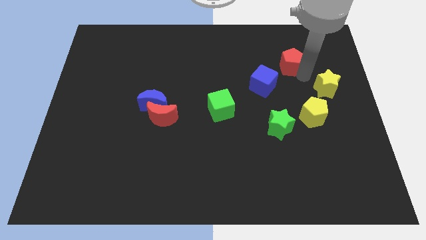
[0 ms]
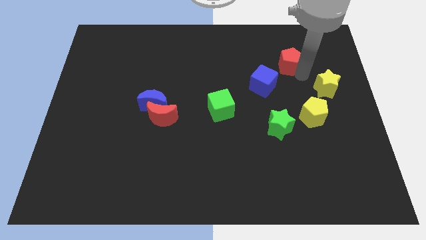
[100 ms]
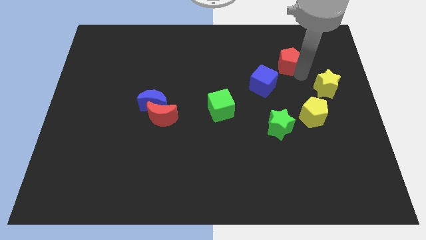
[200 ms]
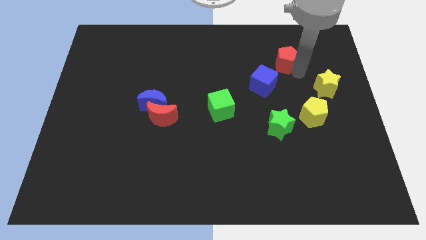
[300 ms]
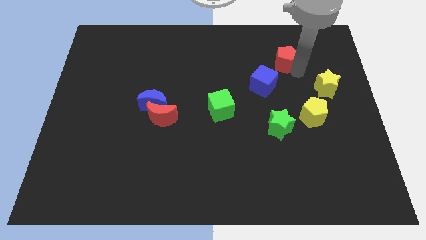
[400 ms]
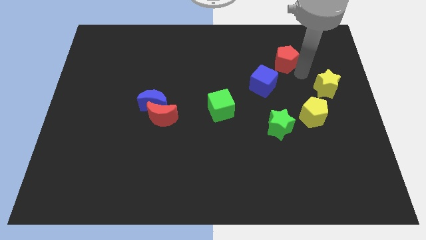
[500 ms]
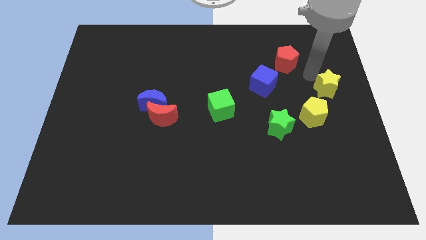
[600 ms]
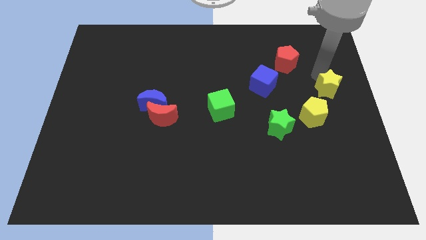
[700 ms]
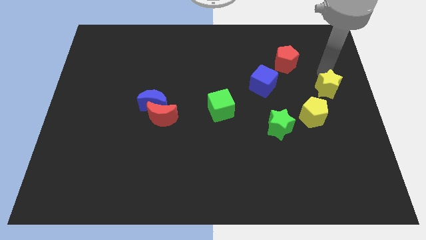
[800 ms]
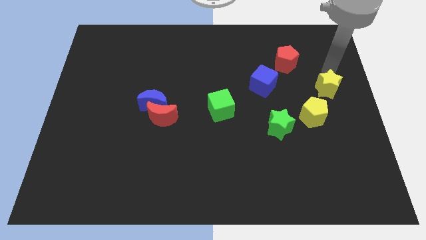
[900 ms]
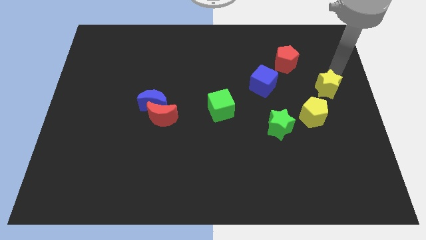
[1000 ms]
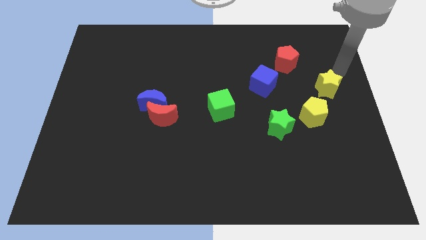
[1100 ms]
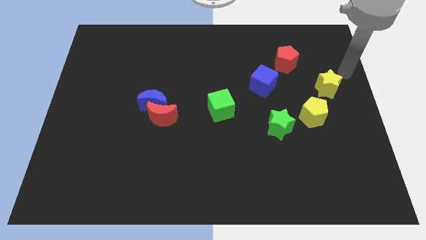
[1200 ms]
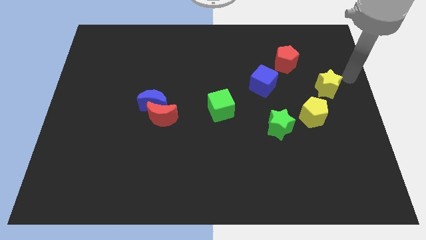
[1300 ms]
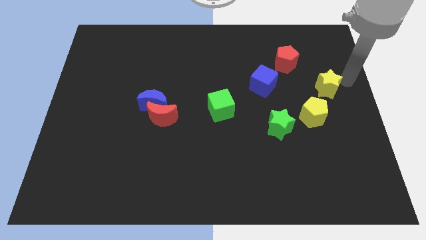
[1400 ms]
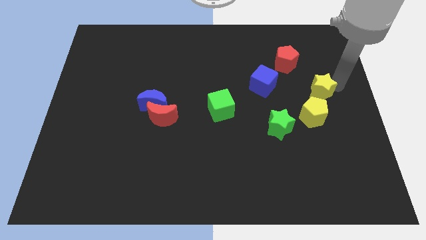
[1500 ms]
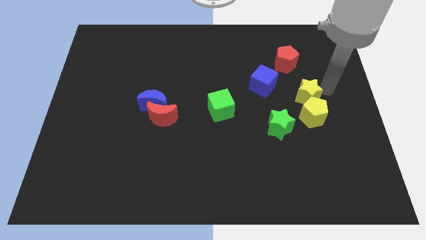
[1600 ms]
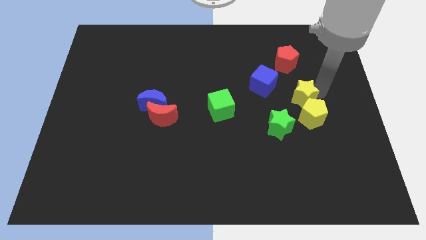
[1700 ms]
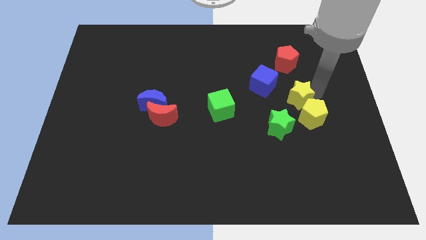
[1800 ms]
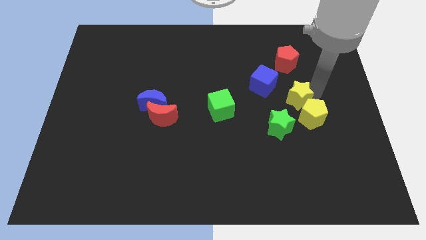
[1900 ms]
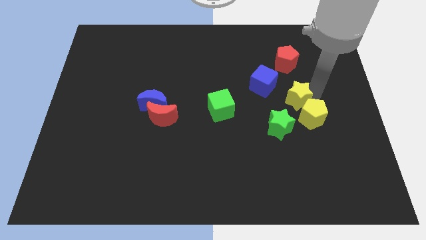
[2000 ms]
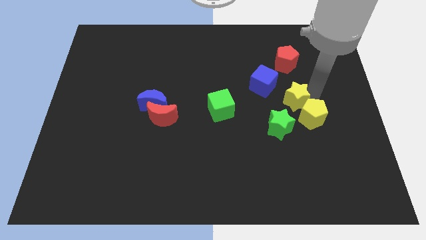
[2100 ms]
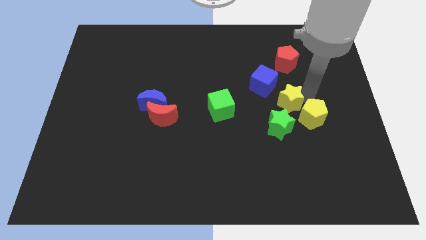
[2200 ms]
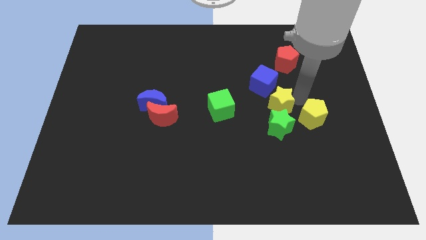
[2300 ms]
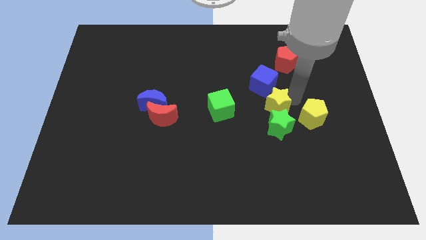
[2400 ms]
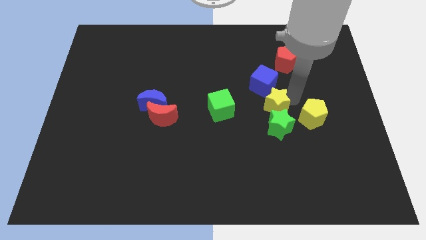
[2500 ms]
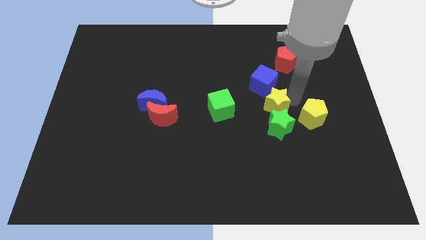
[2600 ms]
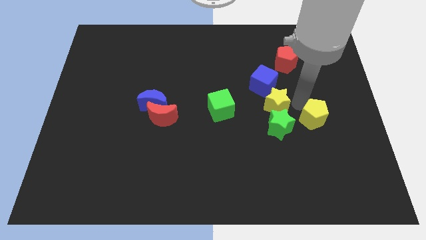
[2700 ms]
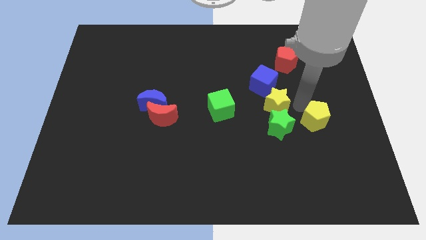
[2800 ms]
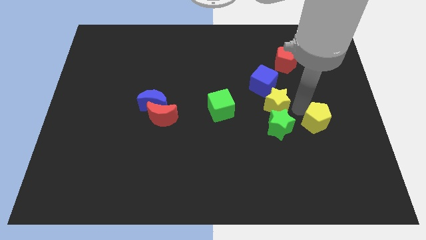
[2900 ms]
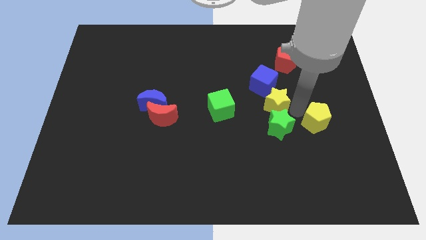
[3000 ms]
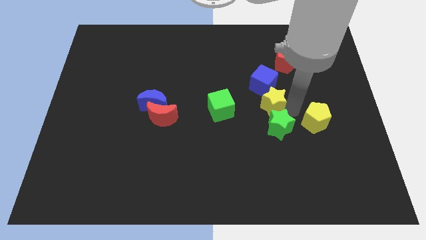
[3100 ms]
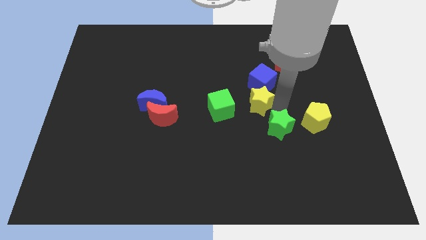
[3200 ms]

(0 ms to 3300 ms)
place the yellow star above the green star

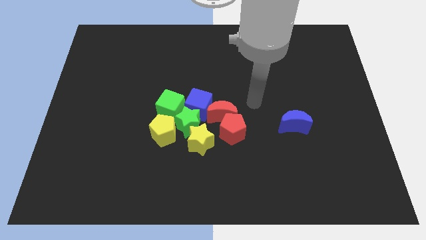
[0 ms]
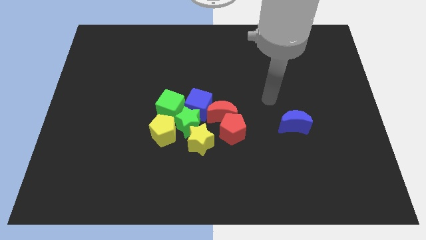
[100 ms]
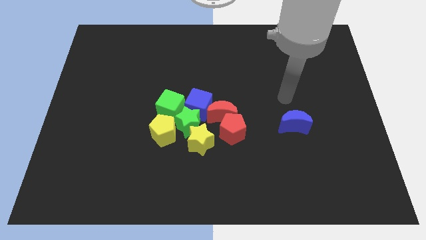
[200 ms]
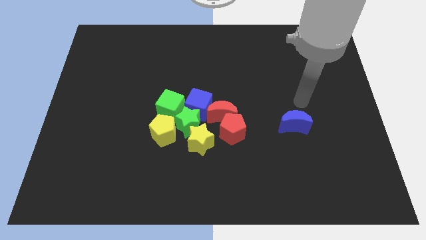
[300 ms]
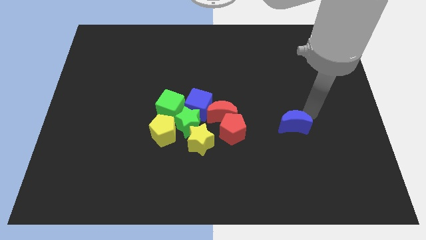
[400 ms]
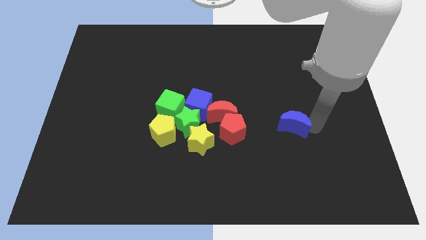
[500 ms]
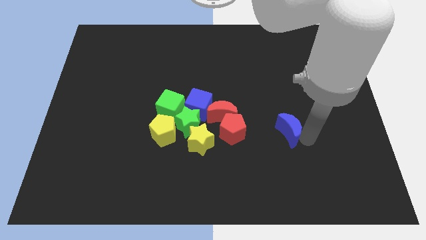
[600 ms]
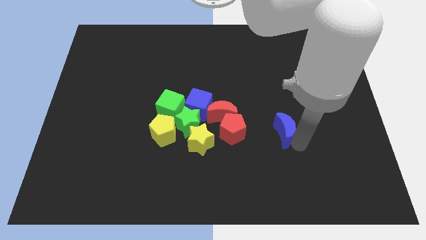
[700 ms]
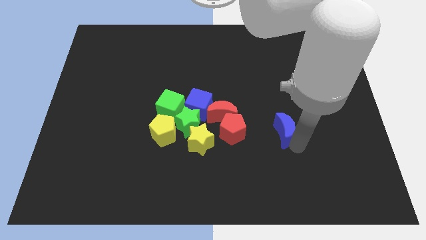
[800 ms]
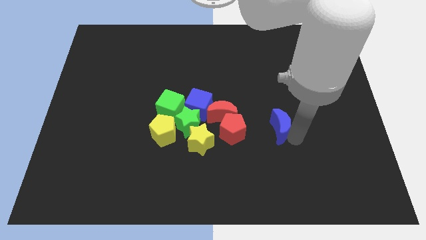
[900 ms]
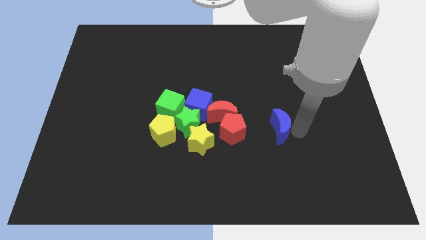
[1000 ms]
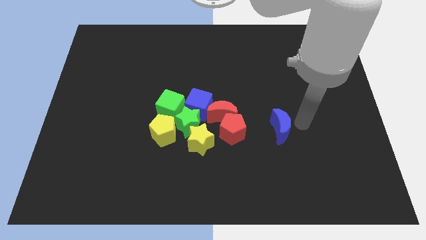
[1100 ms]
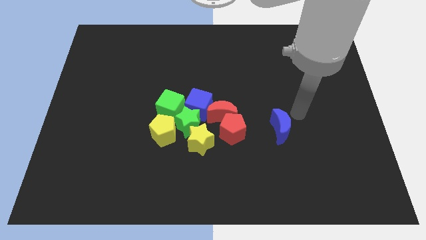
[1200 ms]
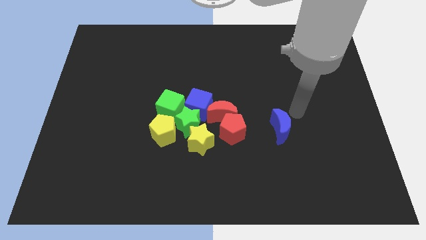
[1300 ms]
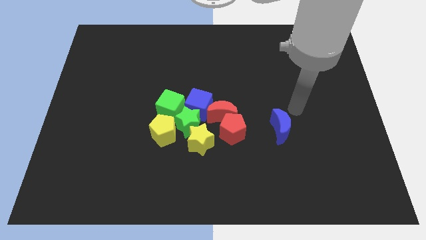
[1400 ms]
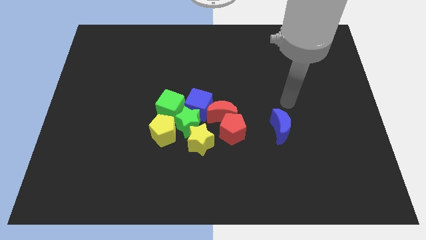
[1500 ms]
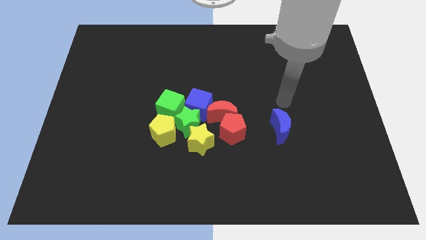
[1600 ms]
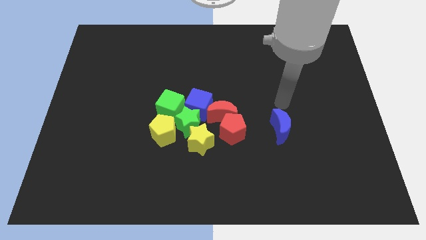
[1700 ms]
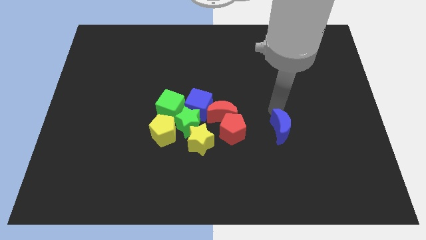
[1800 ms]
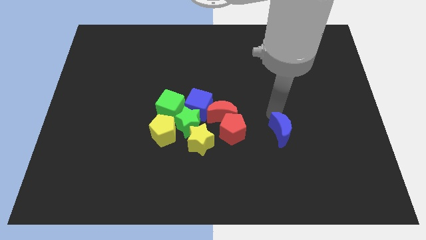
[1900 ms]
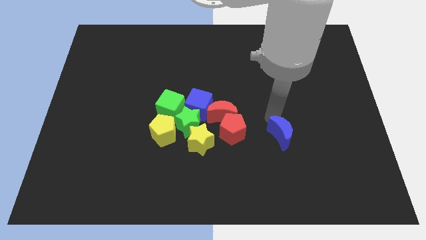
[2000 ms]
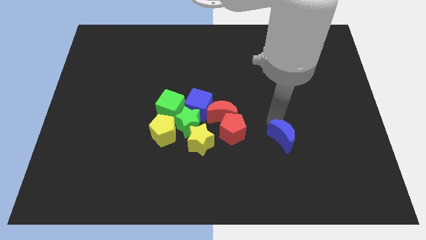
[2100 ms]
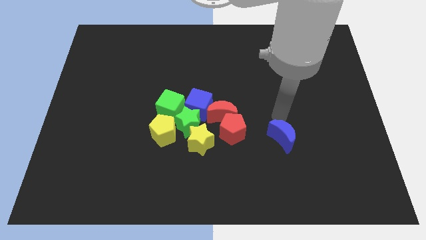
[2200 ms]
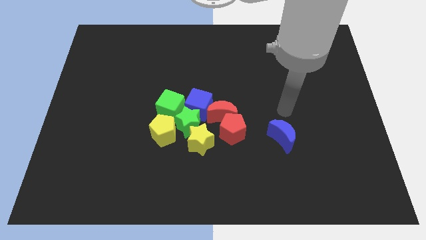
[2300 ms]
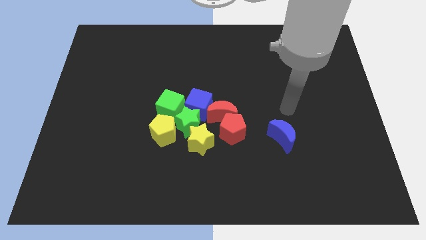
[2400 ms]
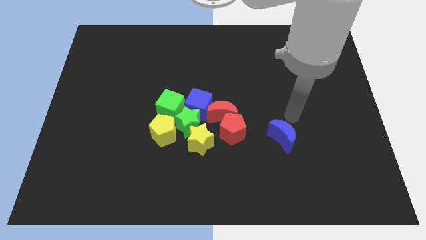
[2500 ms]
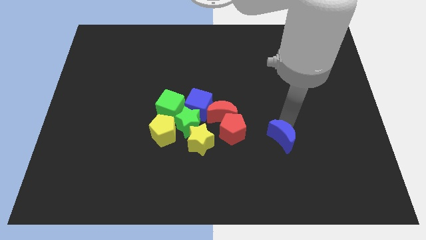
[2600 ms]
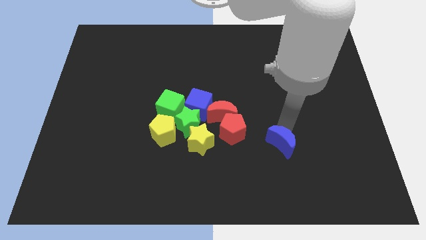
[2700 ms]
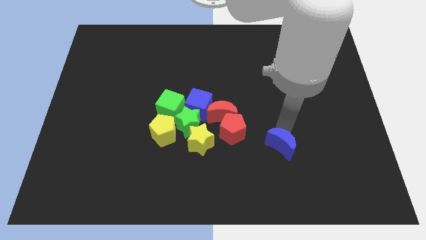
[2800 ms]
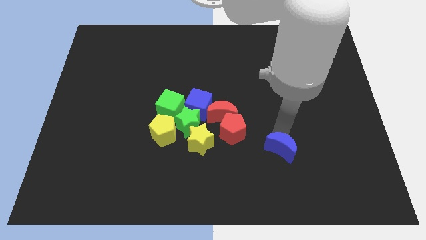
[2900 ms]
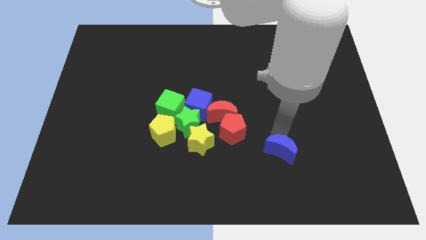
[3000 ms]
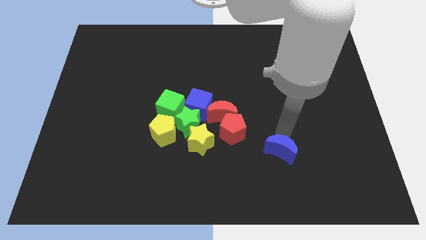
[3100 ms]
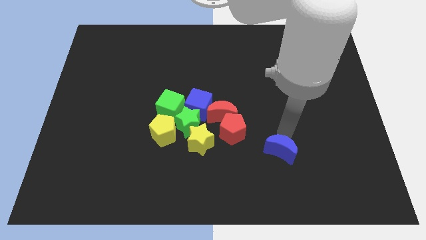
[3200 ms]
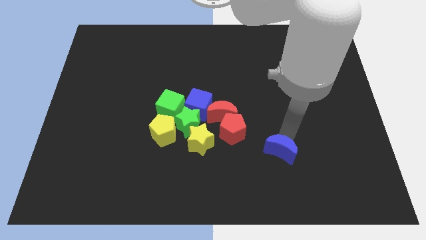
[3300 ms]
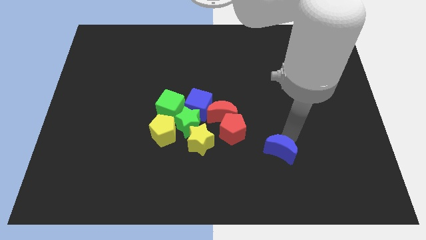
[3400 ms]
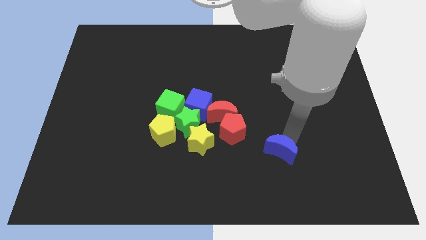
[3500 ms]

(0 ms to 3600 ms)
place the blue moon diagonally on the bottom right side of the red pentagon

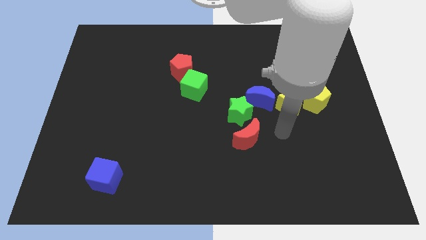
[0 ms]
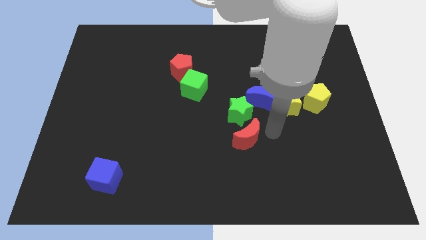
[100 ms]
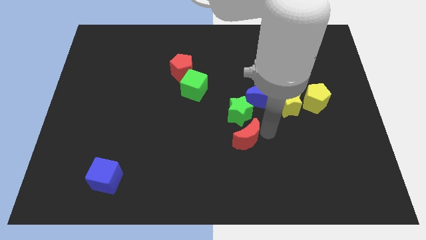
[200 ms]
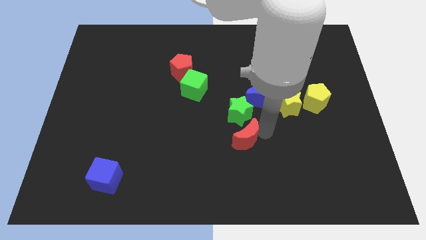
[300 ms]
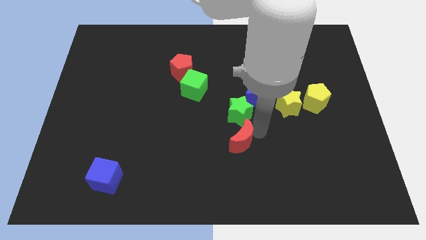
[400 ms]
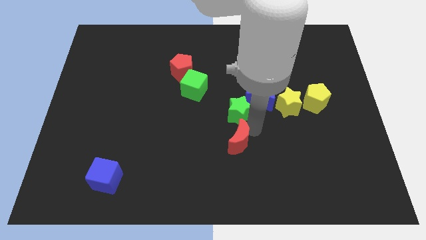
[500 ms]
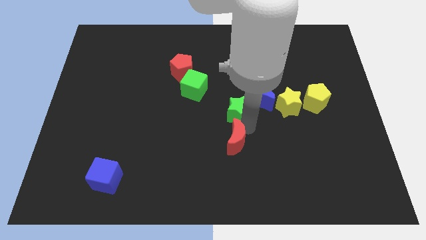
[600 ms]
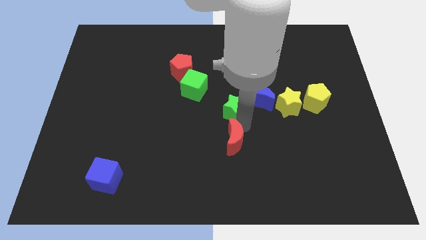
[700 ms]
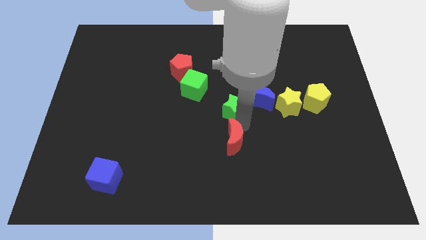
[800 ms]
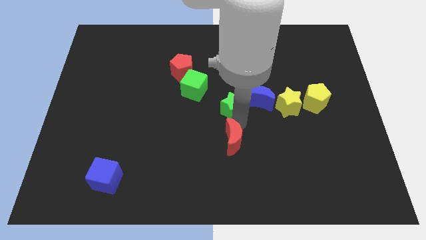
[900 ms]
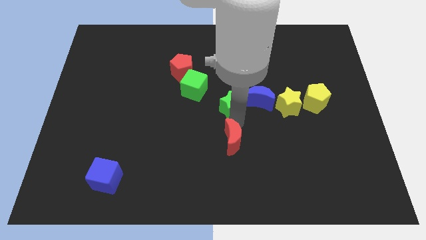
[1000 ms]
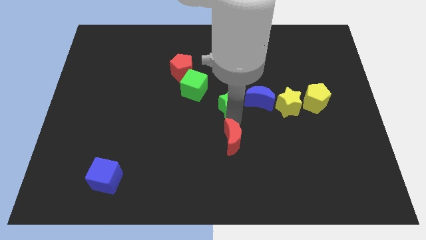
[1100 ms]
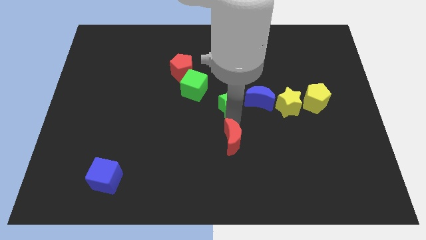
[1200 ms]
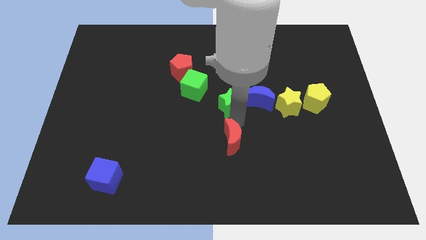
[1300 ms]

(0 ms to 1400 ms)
move the red moon and green star slightly left

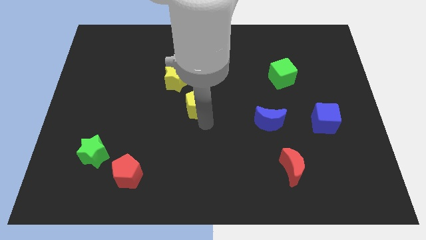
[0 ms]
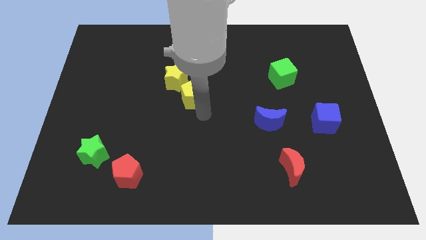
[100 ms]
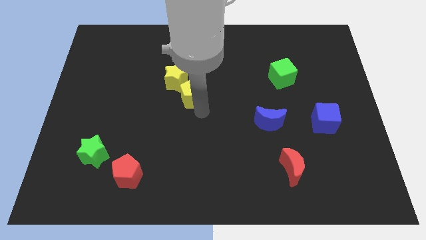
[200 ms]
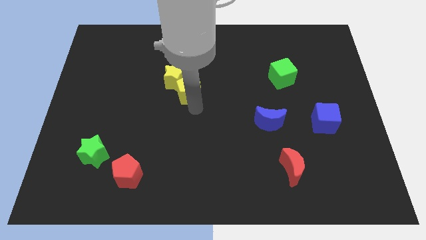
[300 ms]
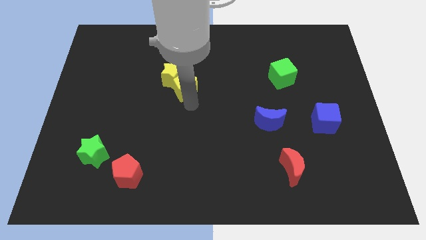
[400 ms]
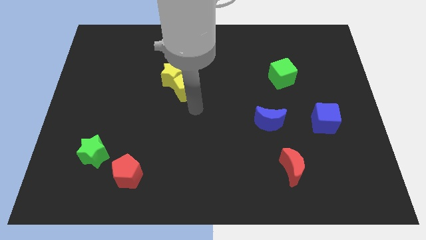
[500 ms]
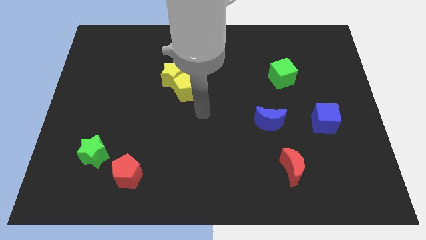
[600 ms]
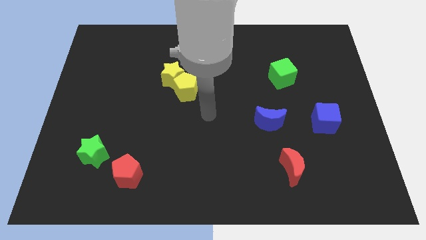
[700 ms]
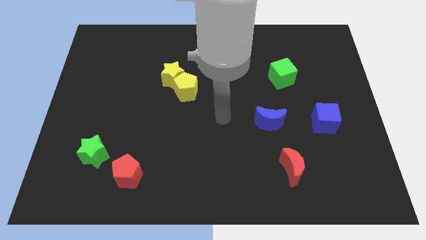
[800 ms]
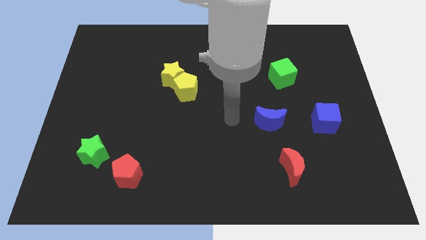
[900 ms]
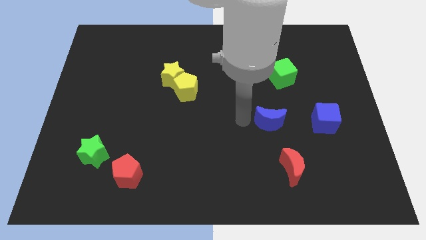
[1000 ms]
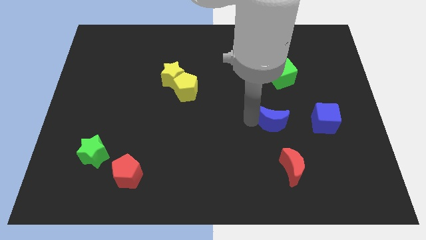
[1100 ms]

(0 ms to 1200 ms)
push the yellow pentagon into the yellow star
